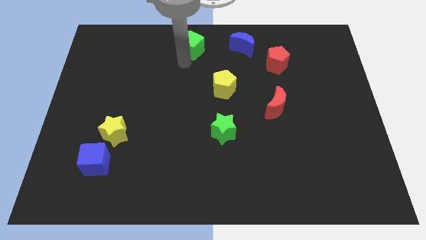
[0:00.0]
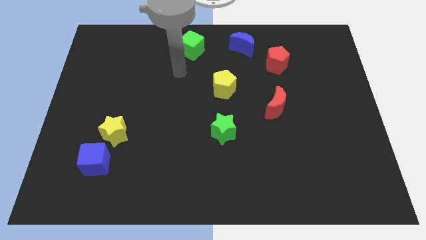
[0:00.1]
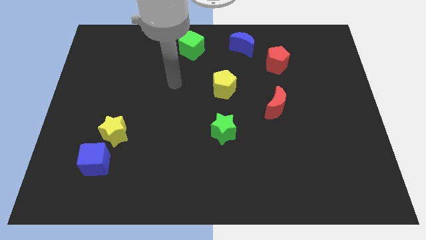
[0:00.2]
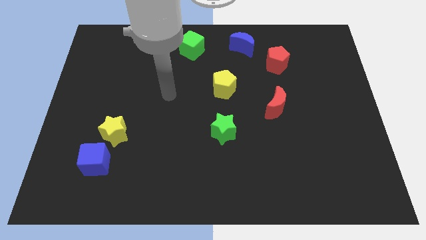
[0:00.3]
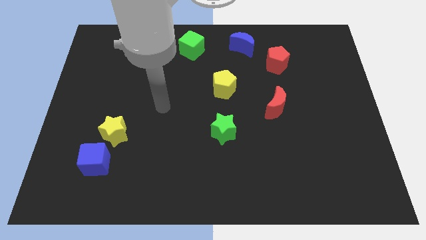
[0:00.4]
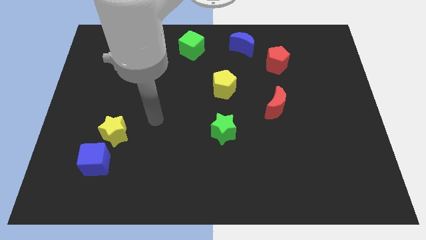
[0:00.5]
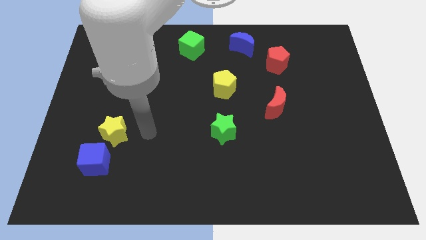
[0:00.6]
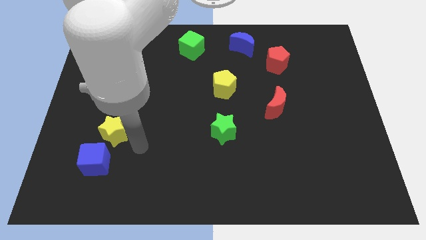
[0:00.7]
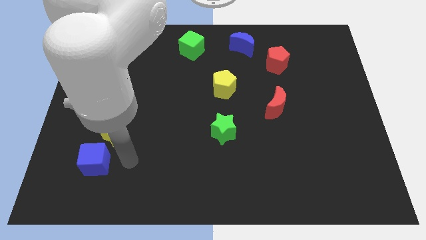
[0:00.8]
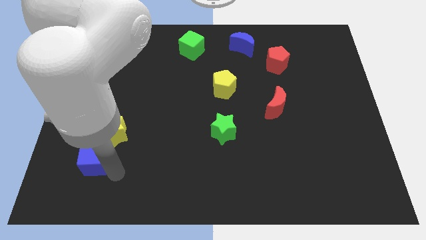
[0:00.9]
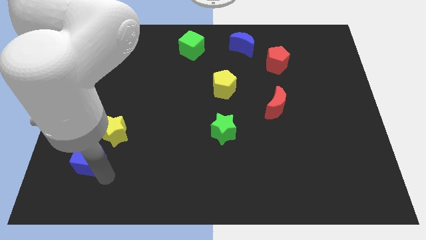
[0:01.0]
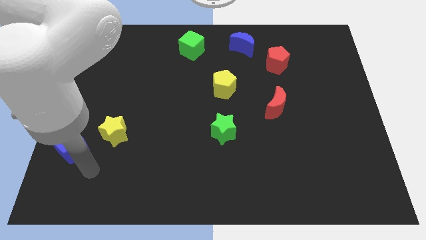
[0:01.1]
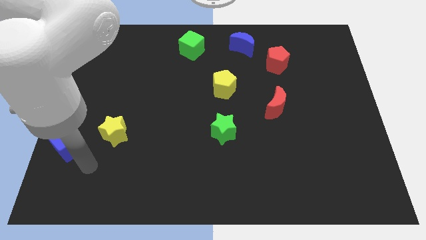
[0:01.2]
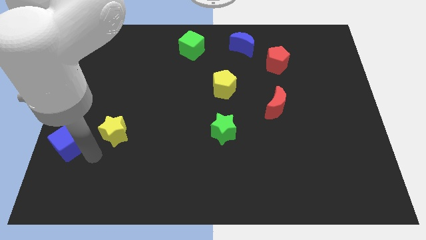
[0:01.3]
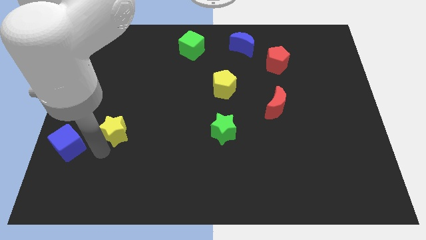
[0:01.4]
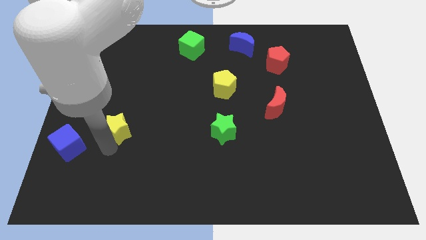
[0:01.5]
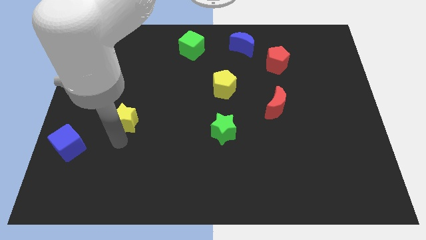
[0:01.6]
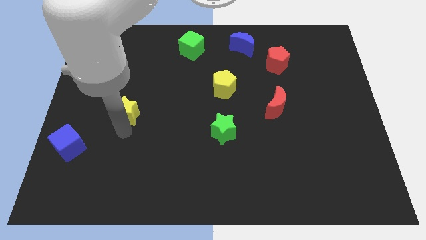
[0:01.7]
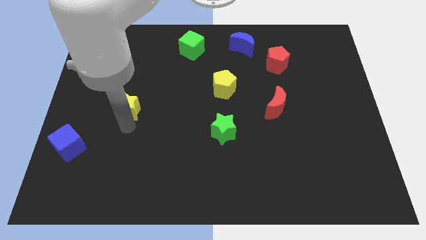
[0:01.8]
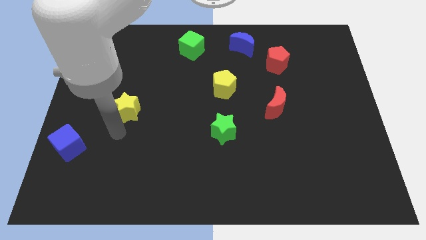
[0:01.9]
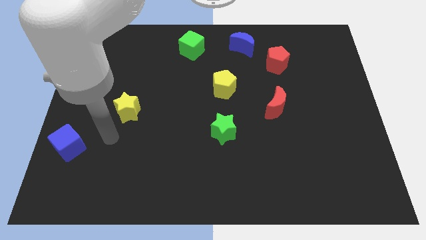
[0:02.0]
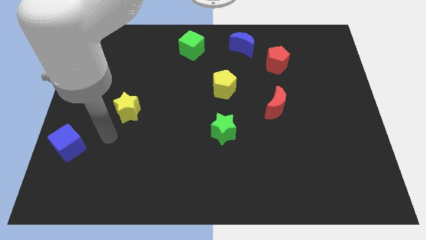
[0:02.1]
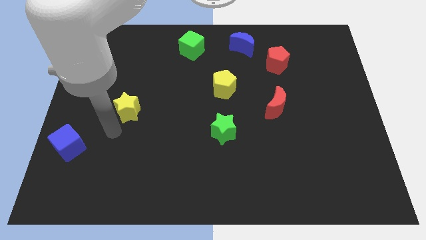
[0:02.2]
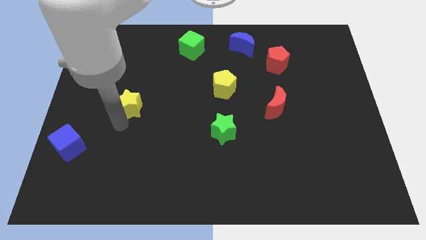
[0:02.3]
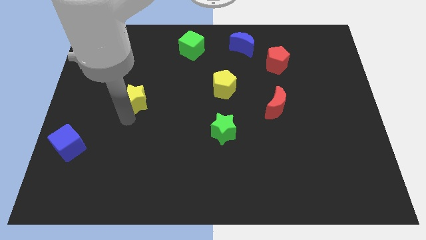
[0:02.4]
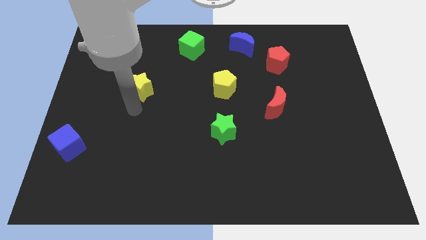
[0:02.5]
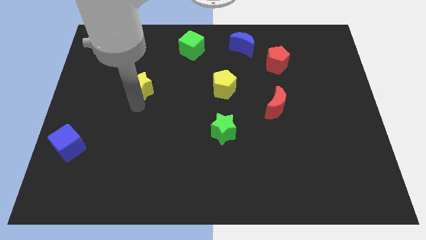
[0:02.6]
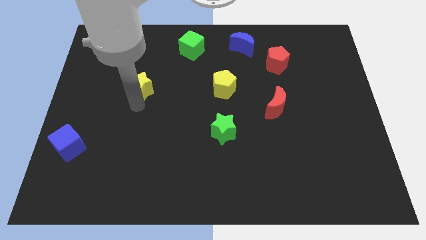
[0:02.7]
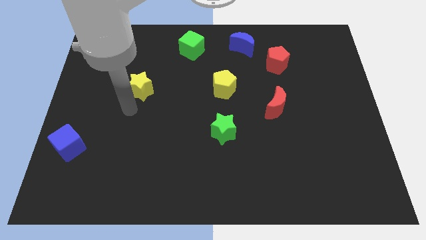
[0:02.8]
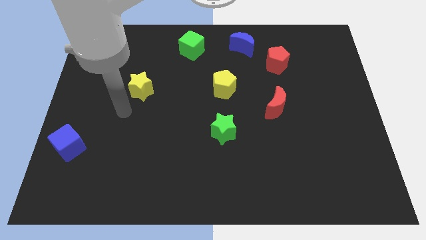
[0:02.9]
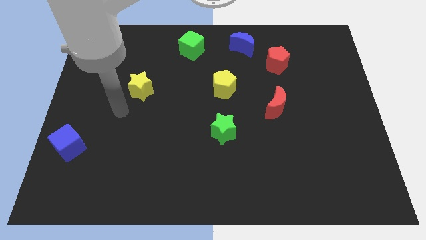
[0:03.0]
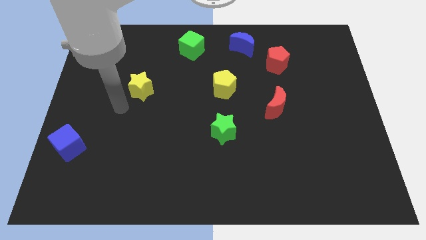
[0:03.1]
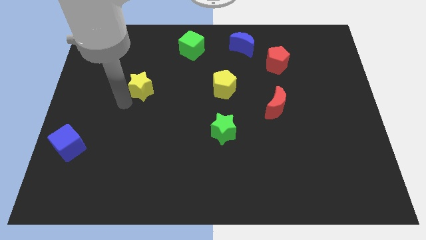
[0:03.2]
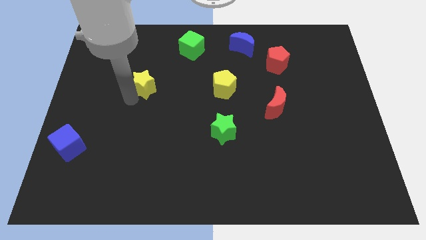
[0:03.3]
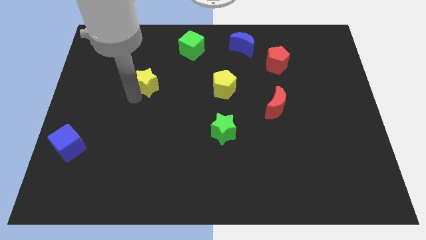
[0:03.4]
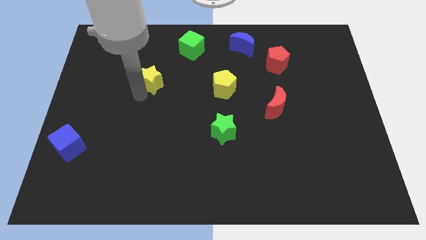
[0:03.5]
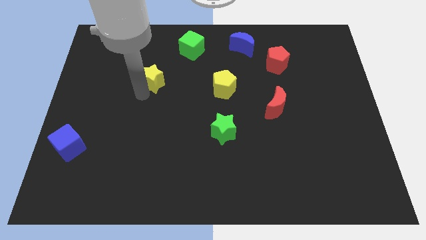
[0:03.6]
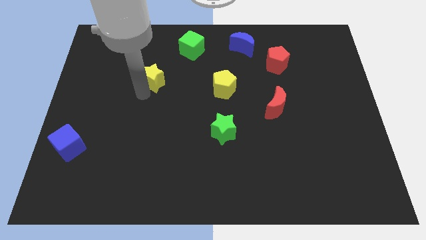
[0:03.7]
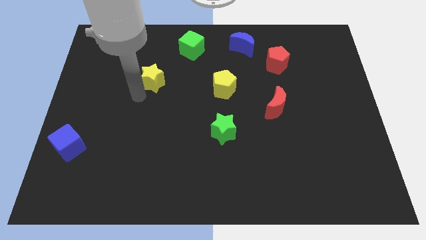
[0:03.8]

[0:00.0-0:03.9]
place the yellow star horizontal to the yellow pentagon

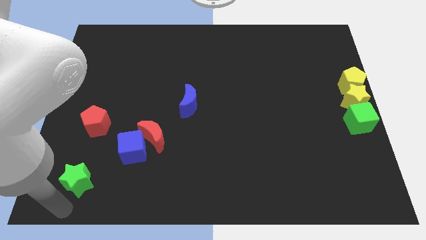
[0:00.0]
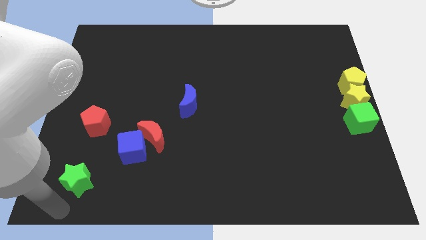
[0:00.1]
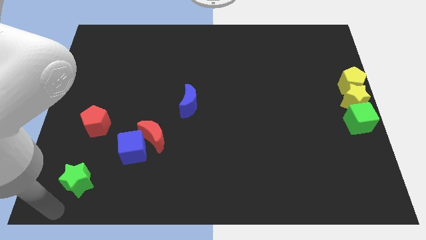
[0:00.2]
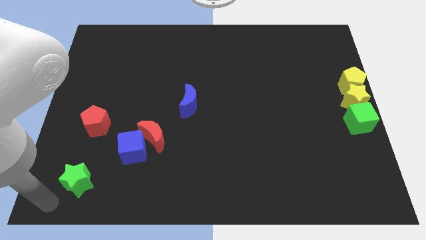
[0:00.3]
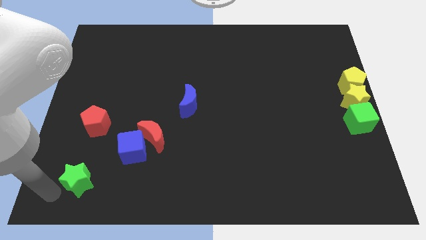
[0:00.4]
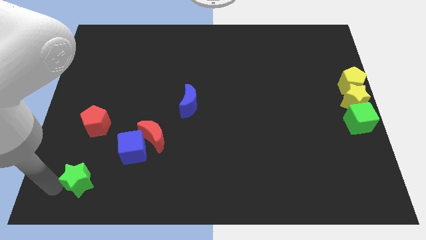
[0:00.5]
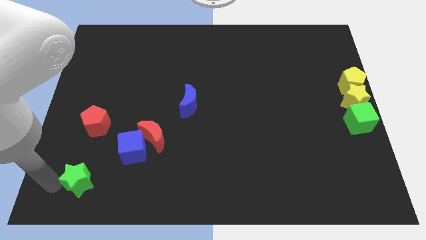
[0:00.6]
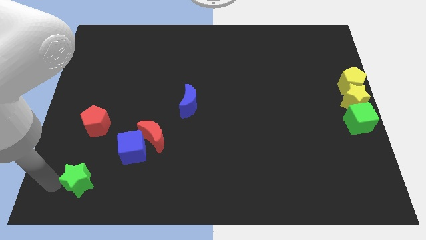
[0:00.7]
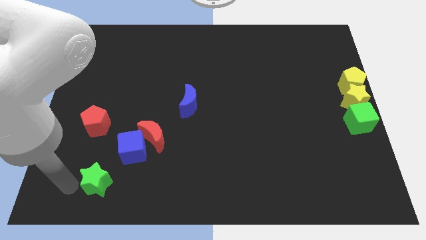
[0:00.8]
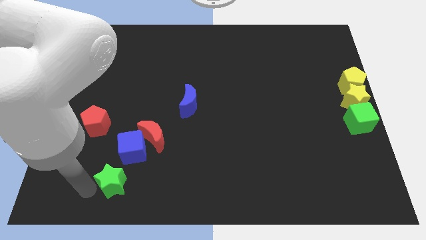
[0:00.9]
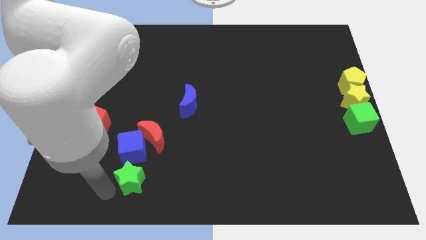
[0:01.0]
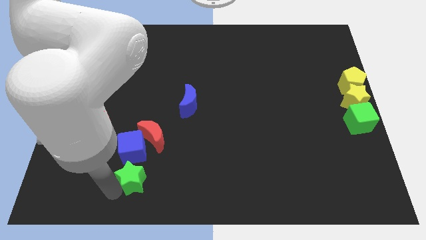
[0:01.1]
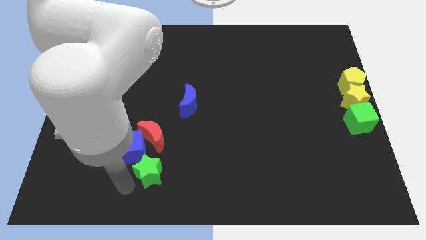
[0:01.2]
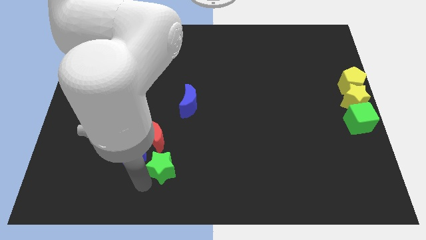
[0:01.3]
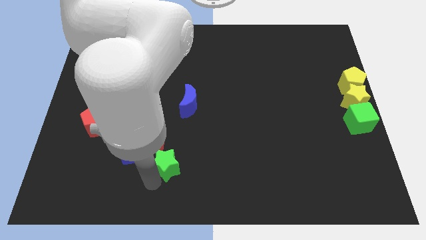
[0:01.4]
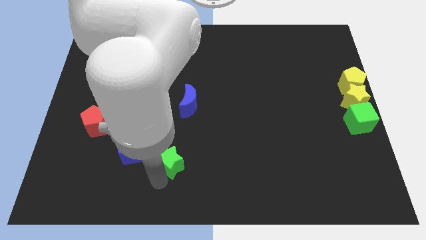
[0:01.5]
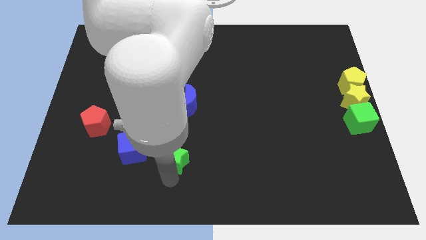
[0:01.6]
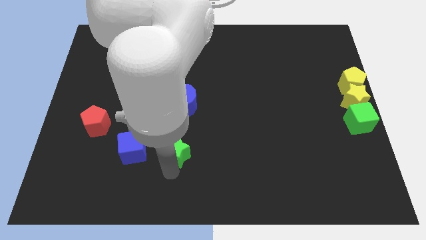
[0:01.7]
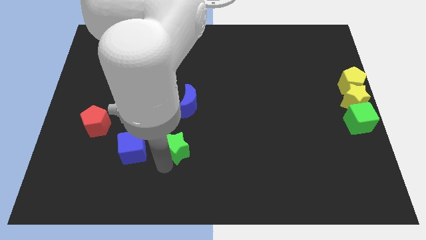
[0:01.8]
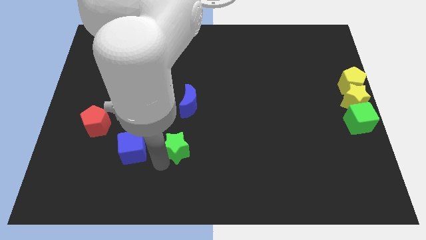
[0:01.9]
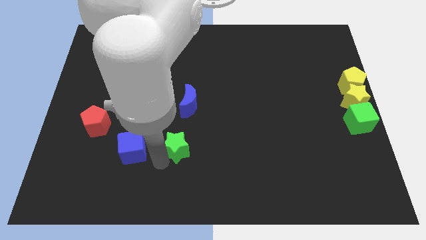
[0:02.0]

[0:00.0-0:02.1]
push green star towards center

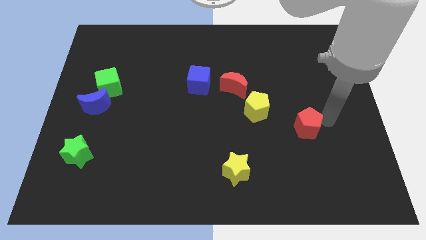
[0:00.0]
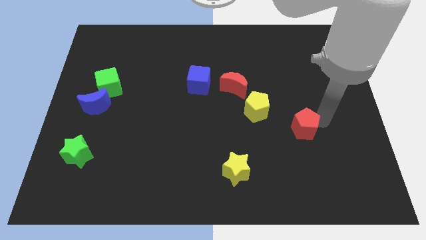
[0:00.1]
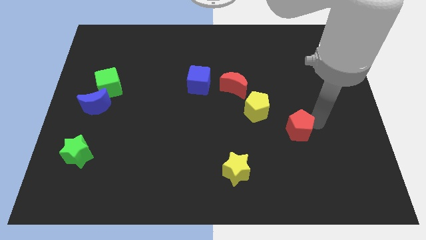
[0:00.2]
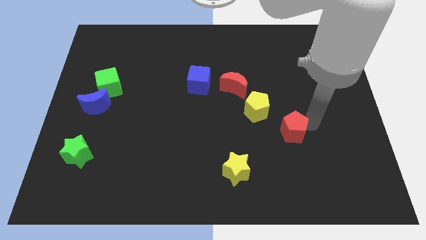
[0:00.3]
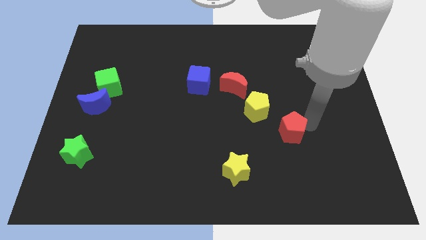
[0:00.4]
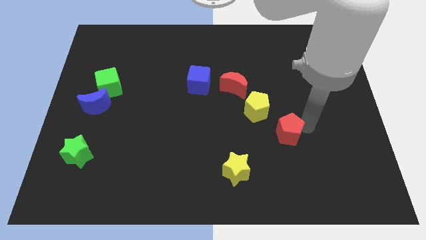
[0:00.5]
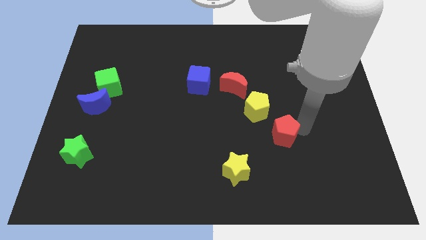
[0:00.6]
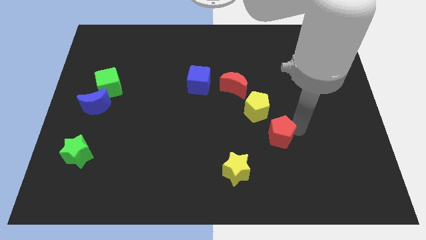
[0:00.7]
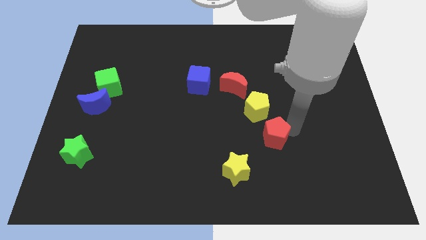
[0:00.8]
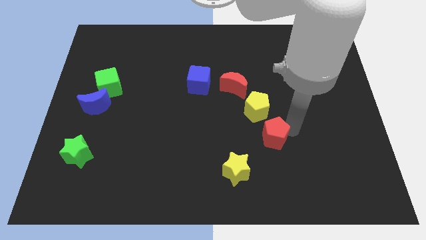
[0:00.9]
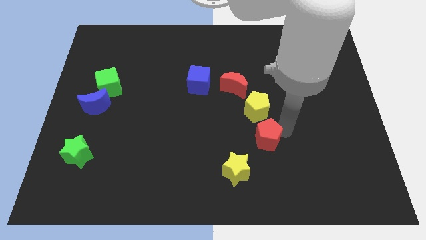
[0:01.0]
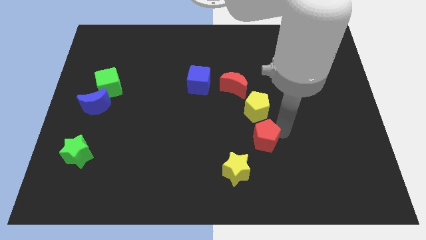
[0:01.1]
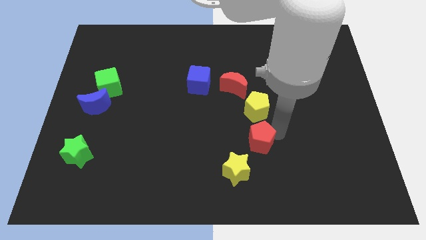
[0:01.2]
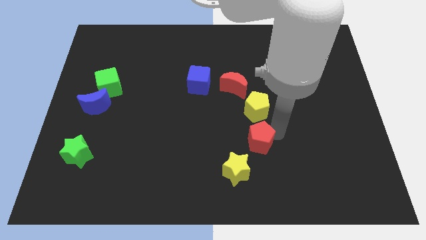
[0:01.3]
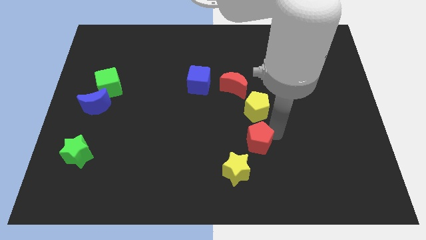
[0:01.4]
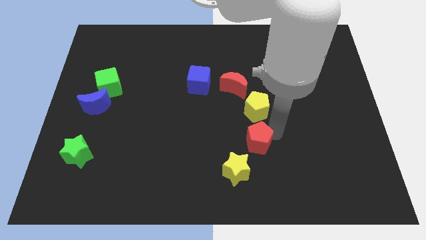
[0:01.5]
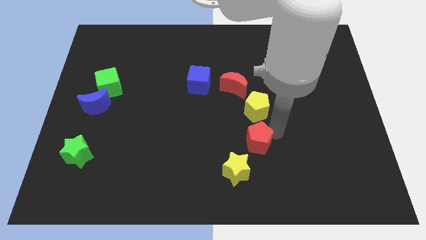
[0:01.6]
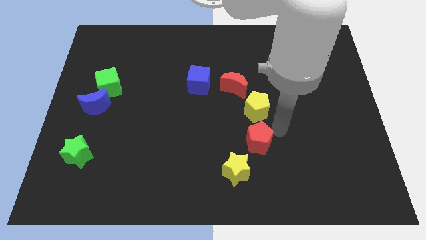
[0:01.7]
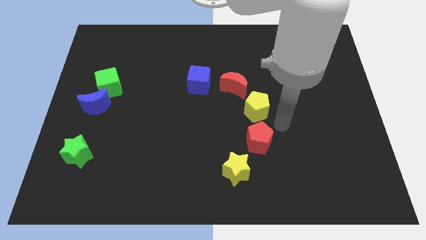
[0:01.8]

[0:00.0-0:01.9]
place the red pentagon to the bottom side of the yellow pentagon

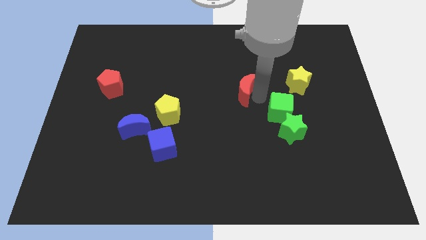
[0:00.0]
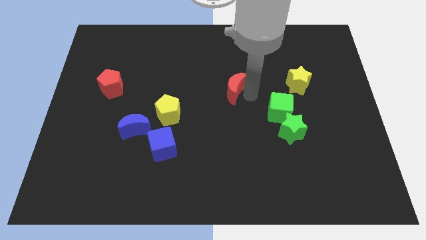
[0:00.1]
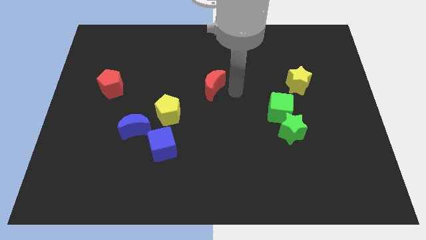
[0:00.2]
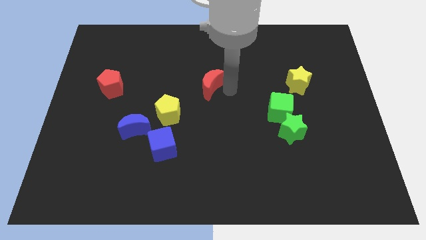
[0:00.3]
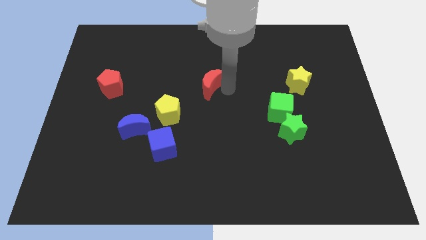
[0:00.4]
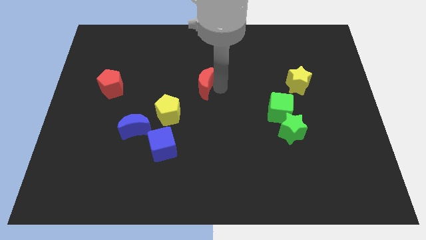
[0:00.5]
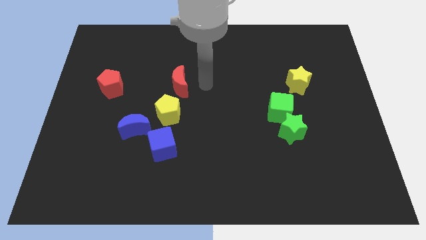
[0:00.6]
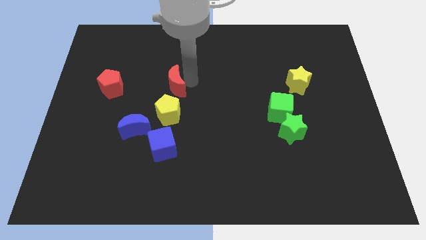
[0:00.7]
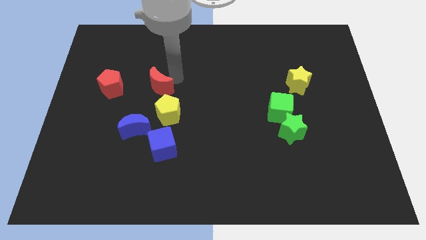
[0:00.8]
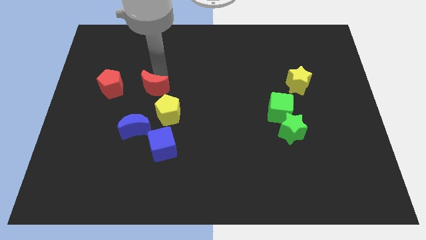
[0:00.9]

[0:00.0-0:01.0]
move the red crescent to the top of the yellow pentagon
